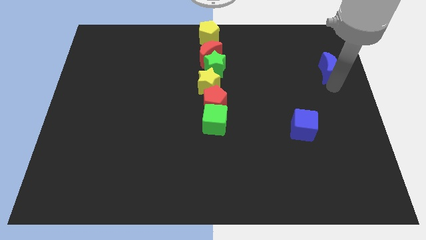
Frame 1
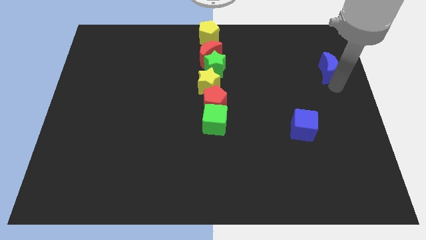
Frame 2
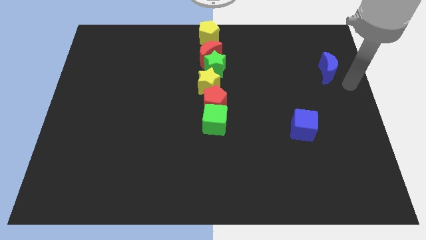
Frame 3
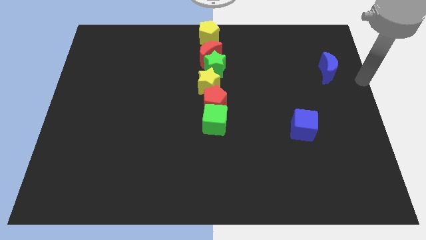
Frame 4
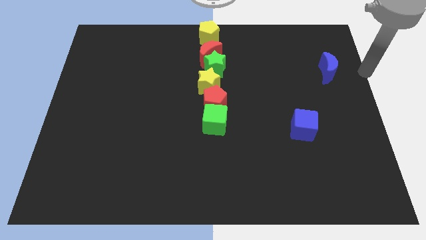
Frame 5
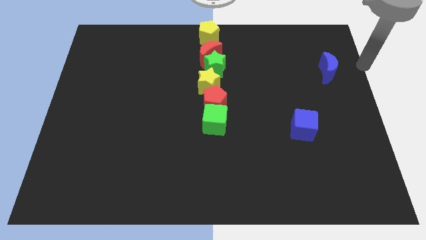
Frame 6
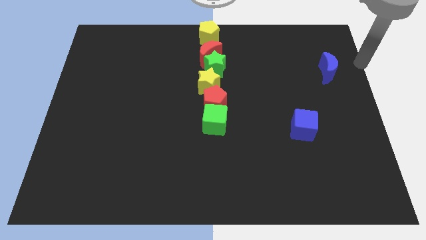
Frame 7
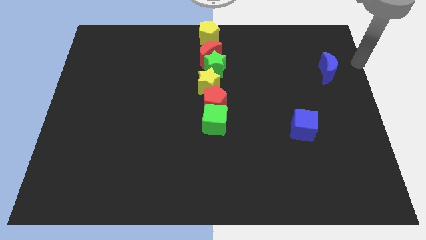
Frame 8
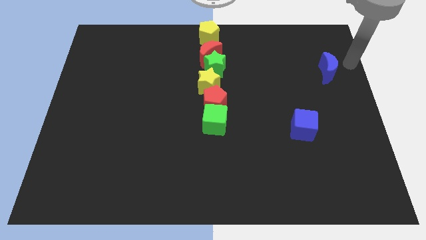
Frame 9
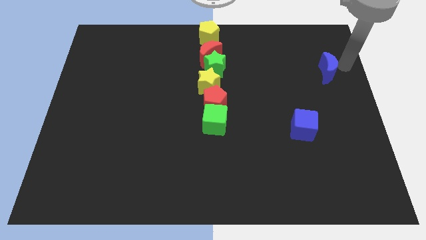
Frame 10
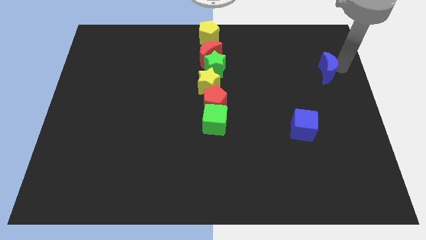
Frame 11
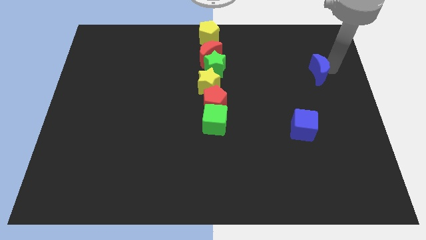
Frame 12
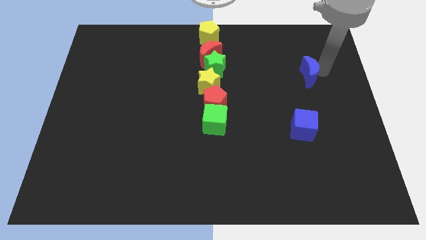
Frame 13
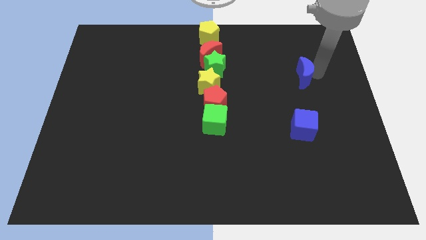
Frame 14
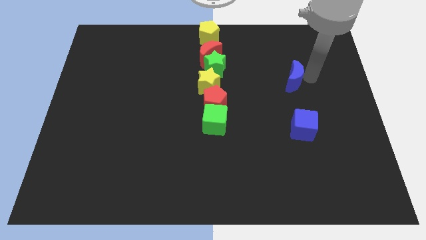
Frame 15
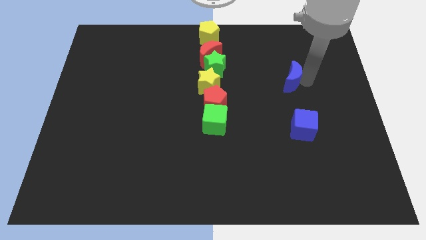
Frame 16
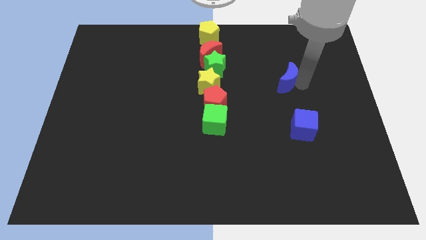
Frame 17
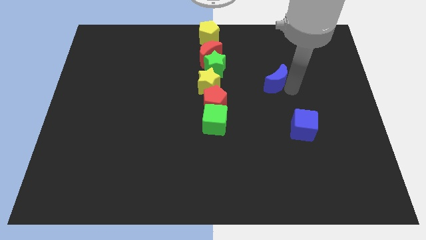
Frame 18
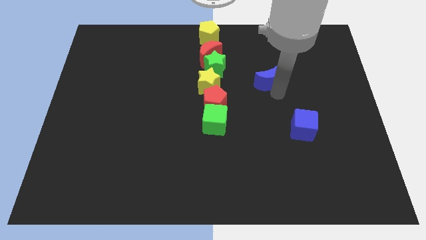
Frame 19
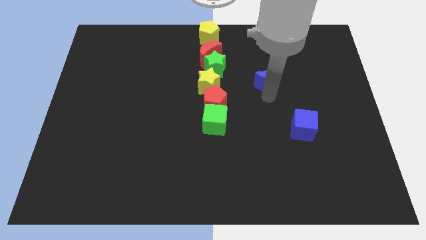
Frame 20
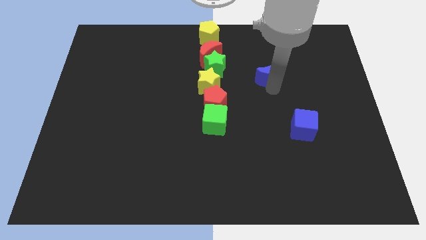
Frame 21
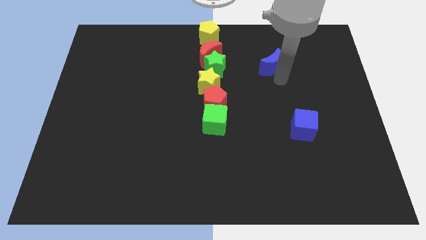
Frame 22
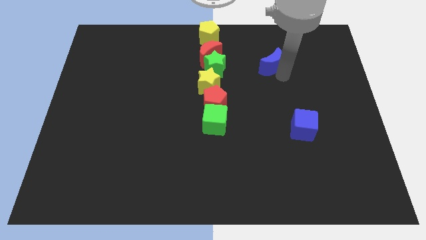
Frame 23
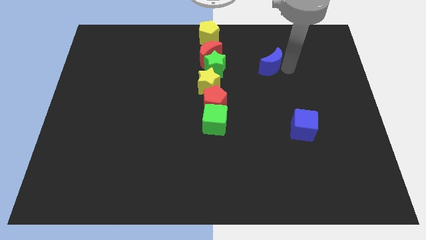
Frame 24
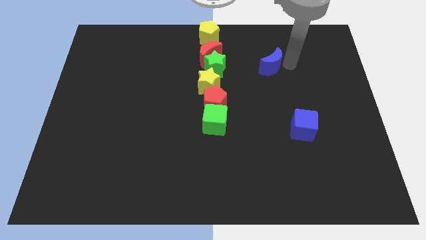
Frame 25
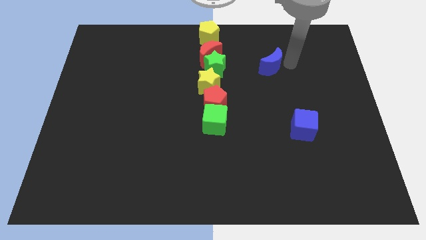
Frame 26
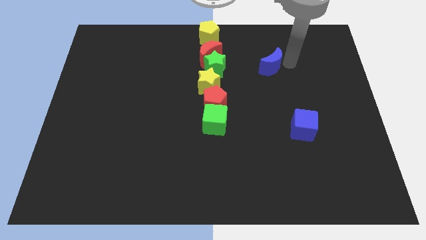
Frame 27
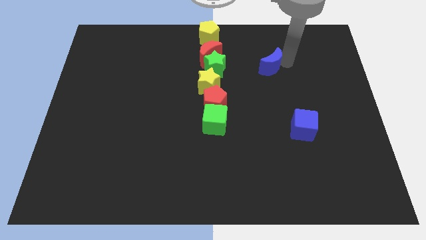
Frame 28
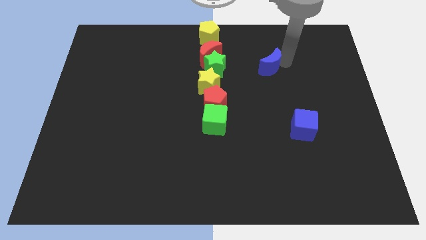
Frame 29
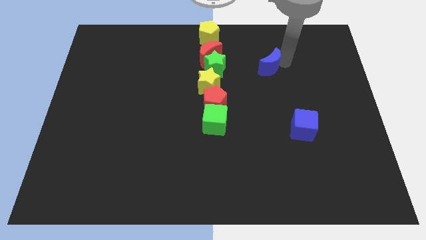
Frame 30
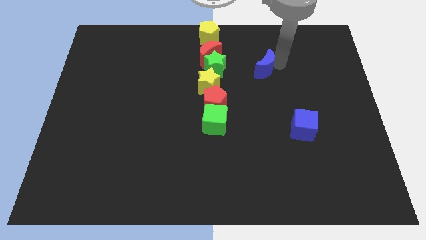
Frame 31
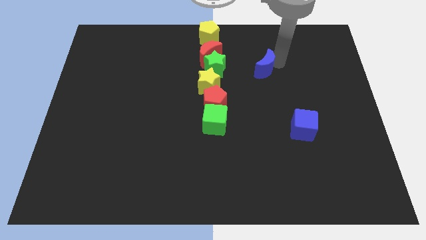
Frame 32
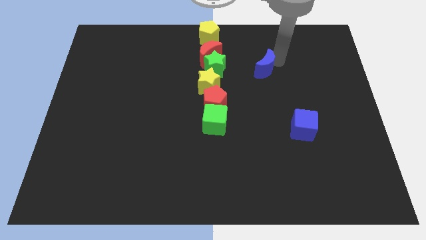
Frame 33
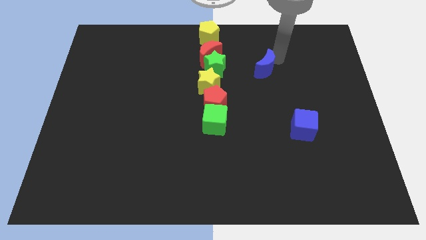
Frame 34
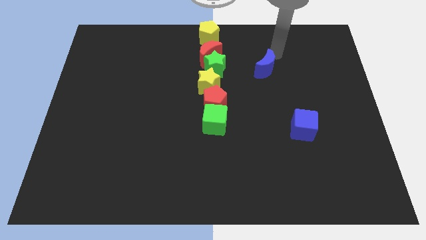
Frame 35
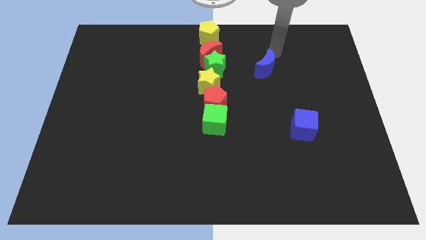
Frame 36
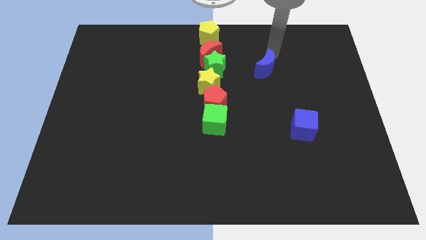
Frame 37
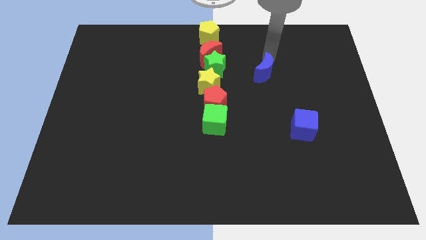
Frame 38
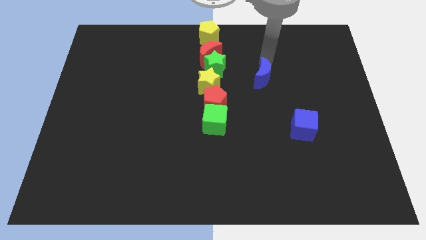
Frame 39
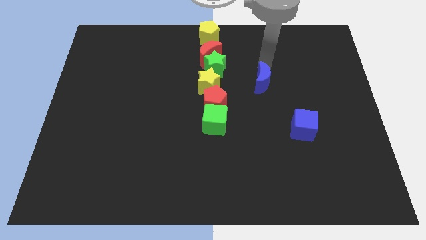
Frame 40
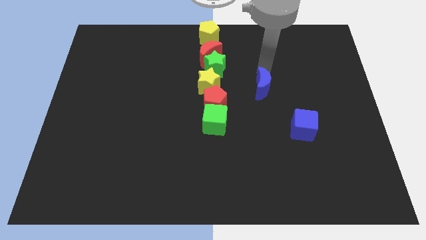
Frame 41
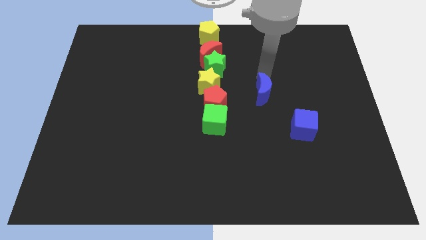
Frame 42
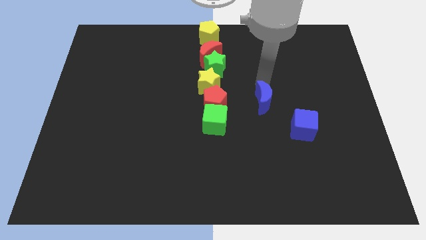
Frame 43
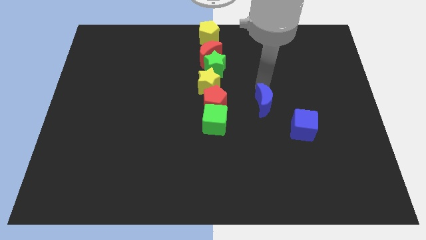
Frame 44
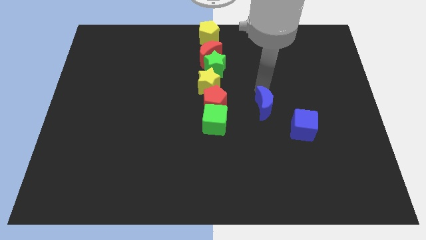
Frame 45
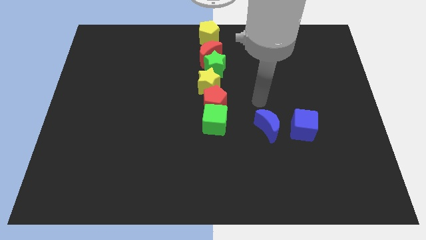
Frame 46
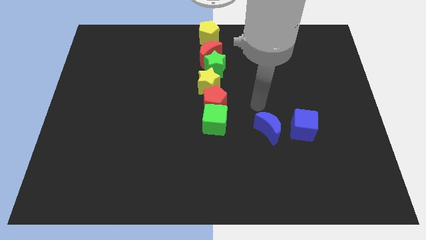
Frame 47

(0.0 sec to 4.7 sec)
place the blue moon in between the blue cube and green cube

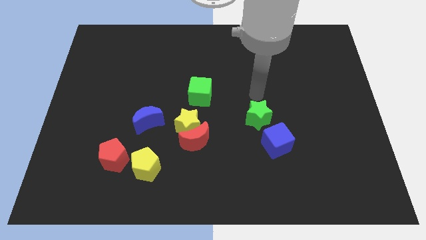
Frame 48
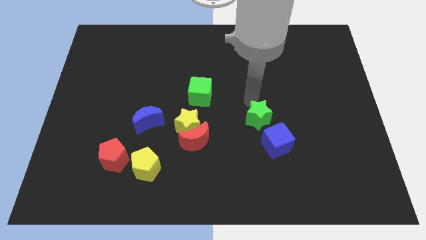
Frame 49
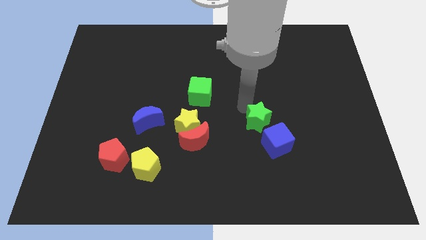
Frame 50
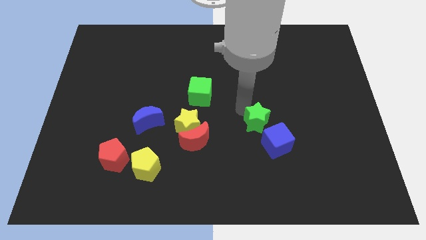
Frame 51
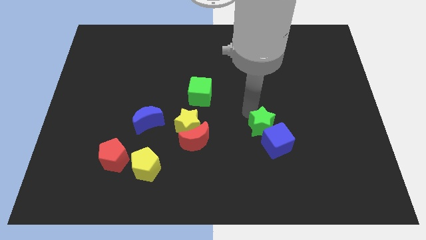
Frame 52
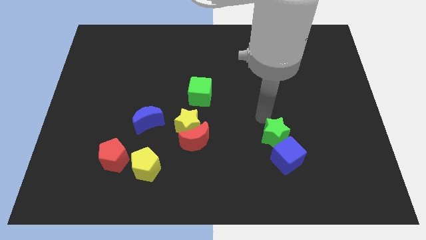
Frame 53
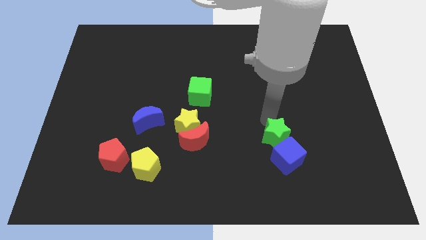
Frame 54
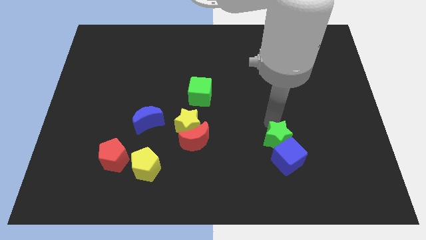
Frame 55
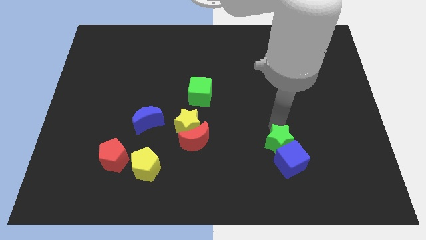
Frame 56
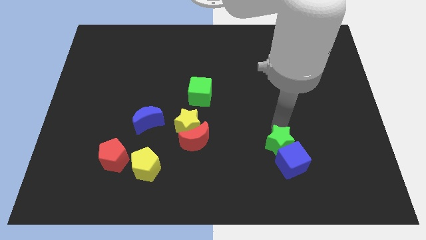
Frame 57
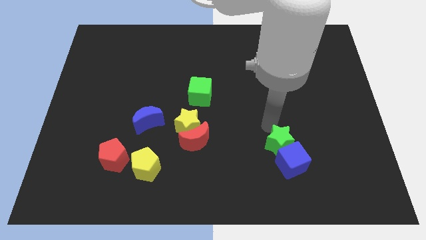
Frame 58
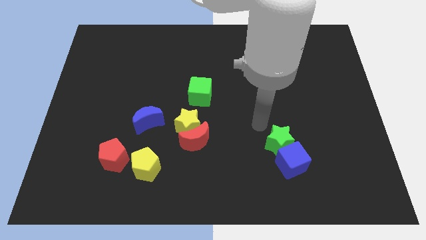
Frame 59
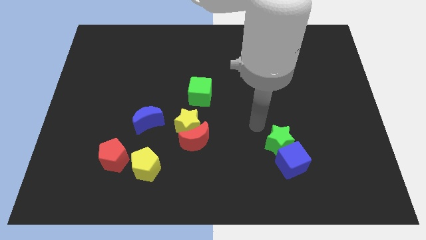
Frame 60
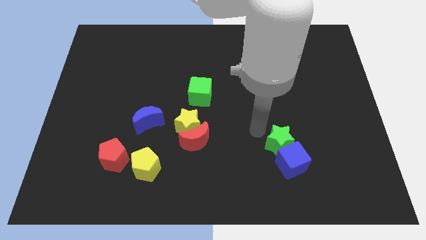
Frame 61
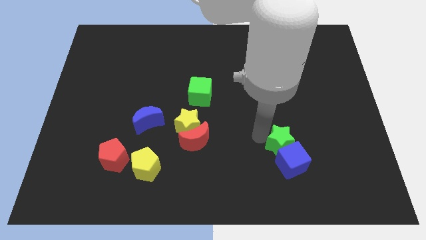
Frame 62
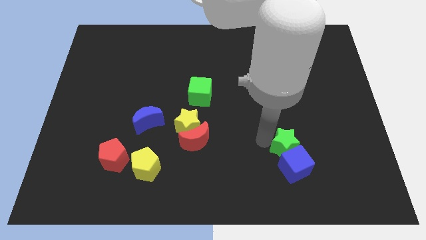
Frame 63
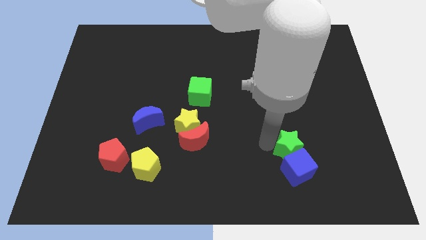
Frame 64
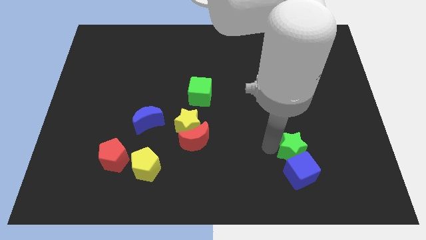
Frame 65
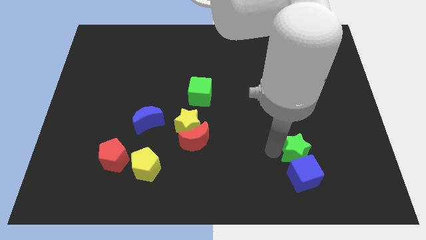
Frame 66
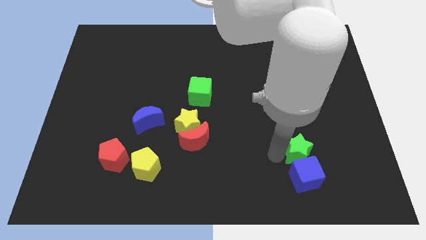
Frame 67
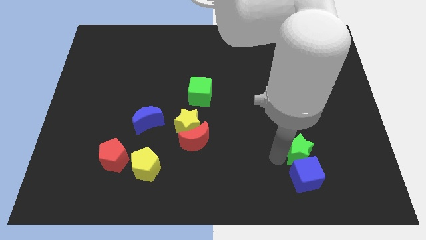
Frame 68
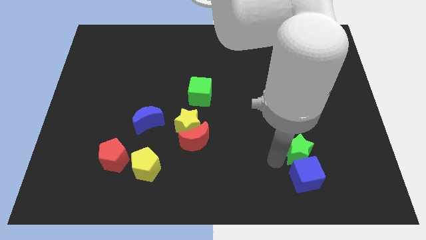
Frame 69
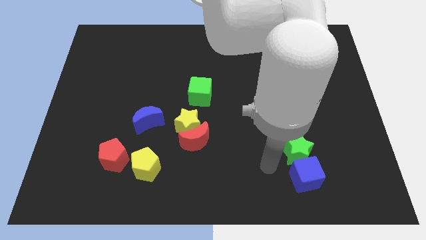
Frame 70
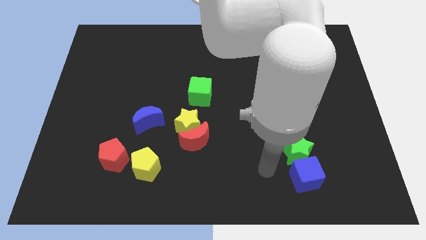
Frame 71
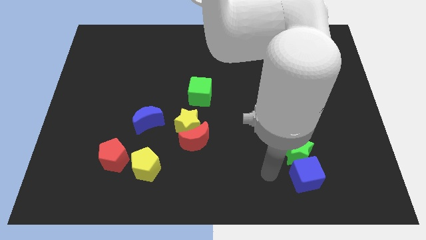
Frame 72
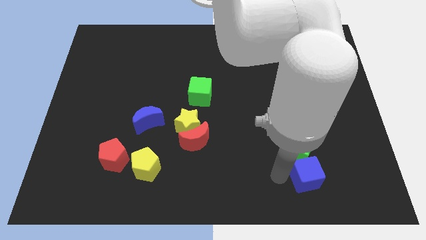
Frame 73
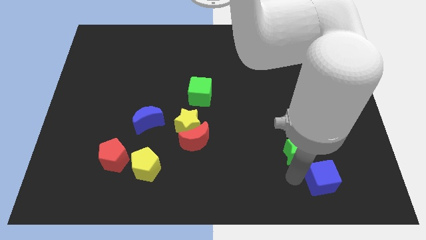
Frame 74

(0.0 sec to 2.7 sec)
push the green star and blue cube towards the bottom right of the board

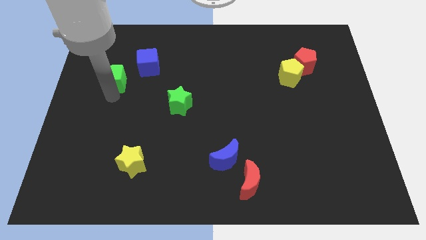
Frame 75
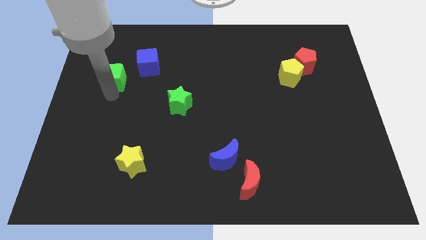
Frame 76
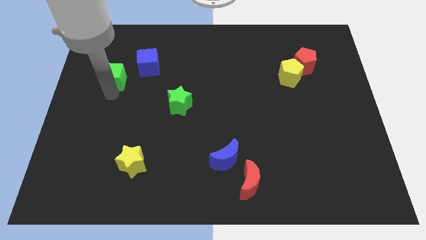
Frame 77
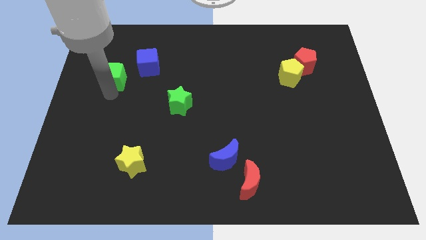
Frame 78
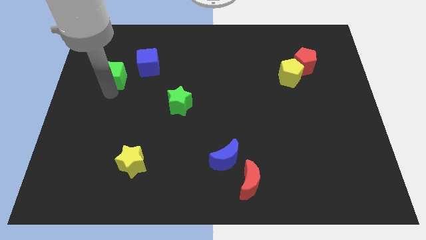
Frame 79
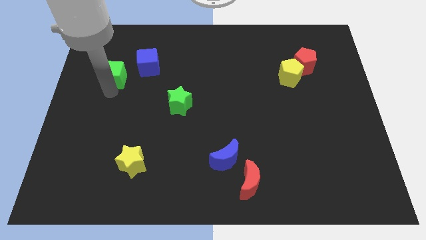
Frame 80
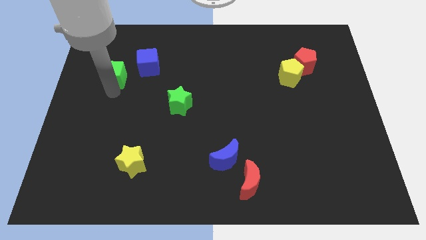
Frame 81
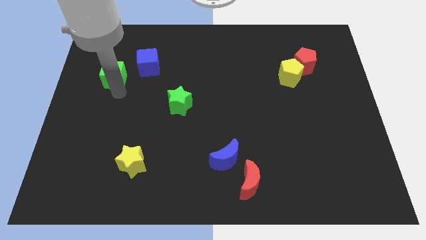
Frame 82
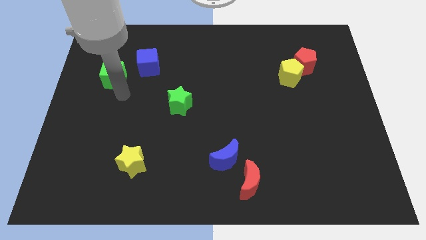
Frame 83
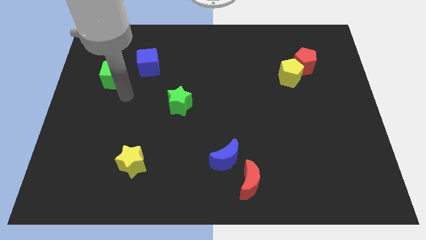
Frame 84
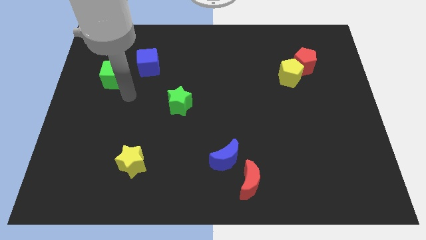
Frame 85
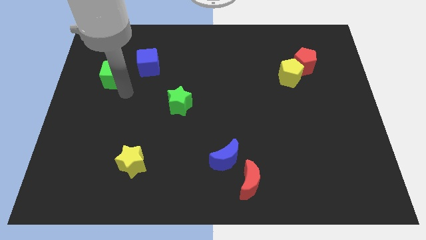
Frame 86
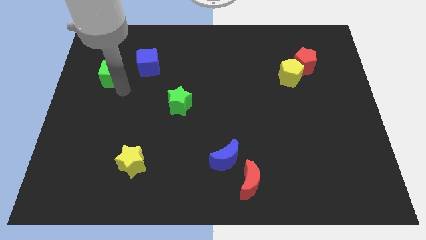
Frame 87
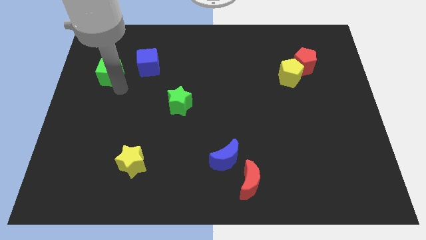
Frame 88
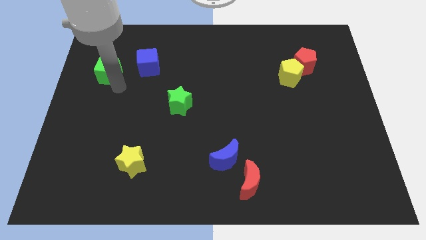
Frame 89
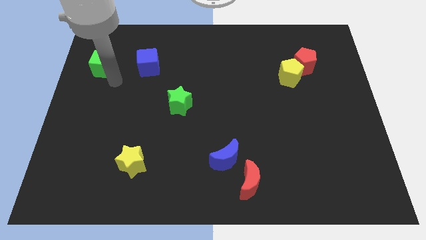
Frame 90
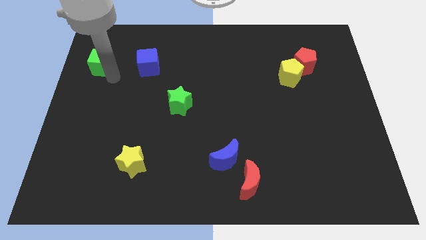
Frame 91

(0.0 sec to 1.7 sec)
place green cube to the left of blue cube
